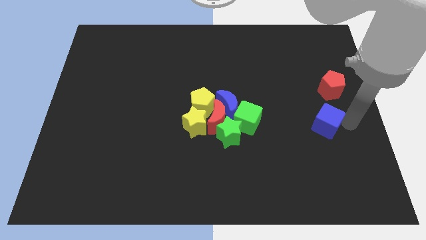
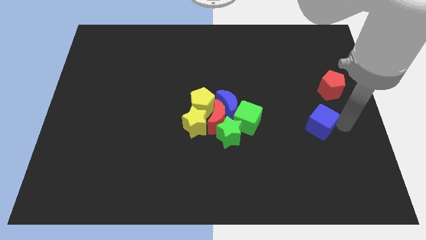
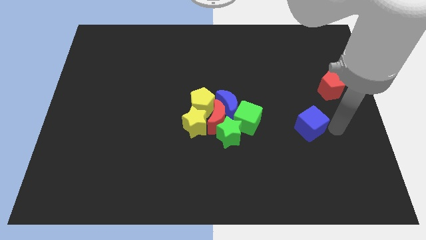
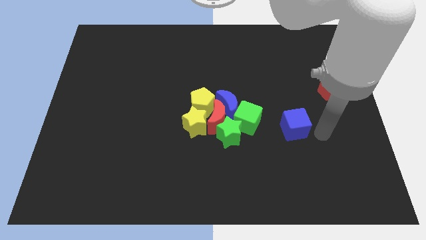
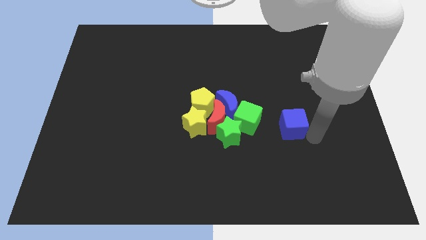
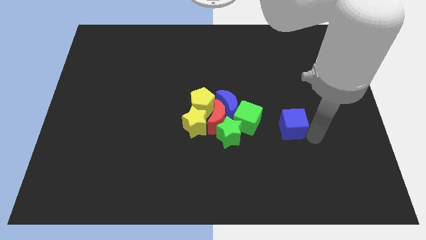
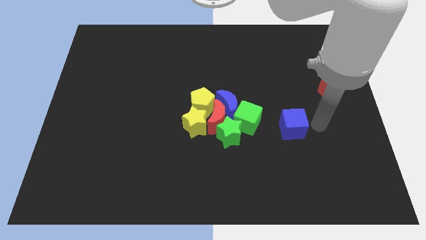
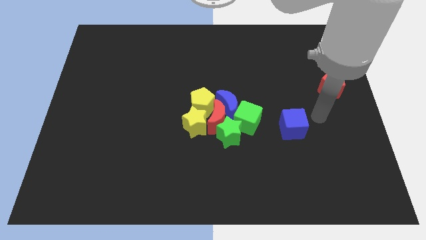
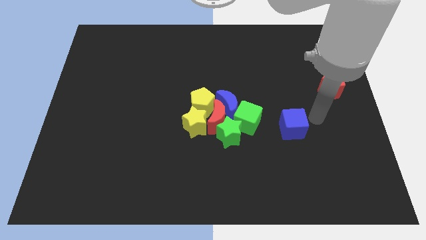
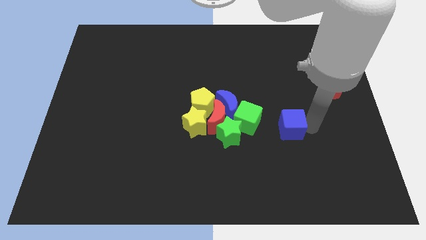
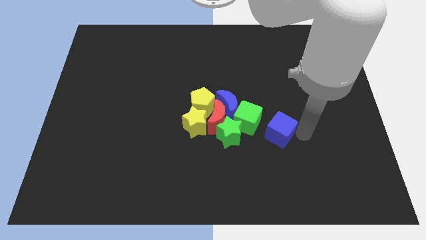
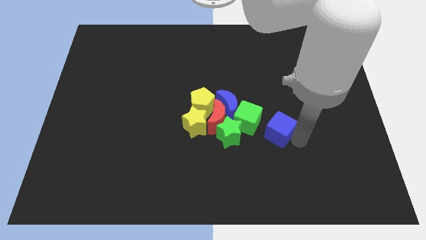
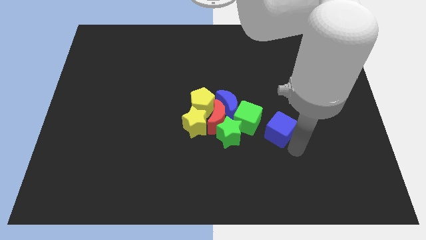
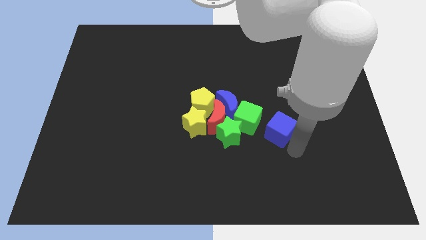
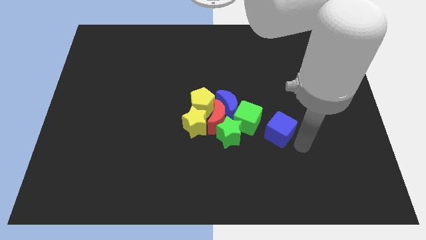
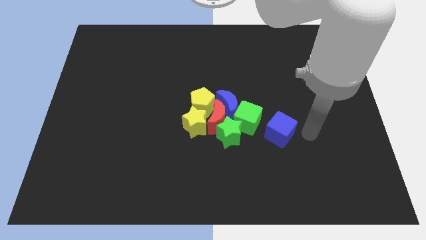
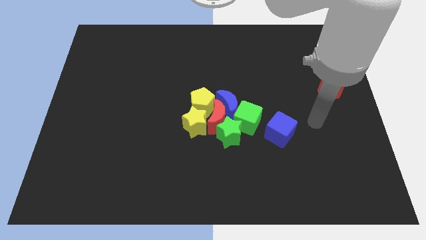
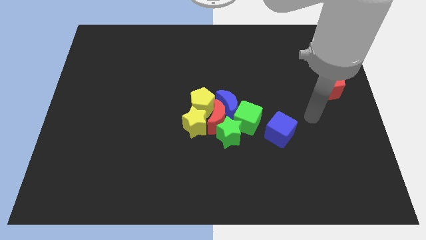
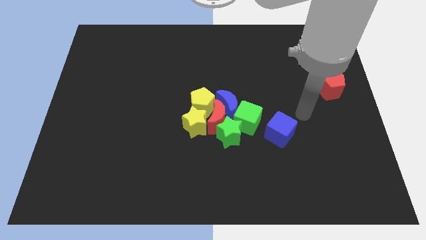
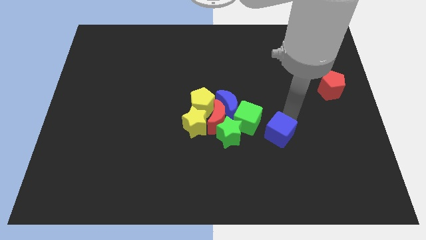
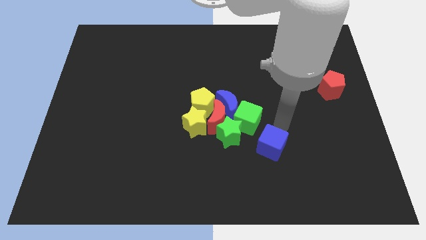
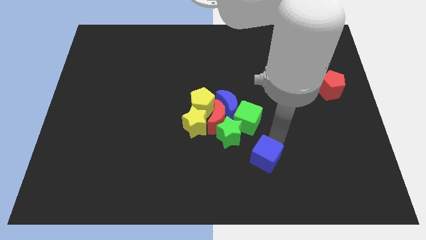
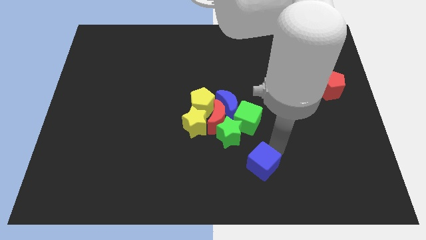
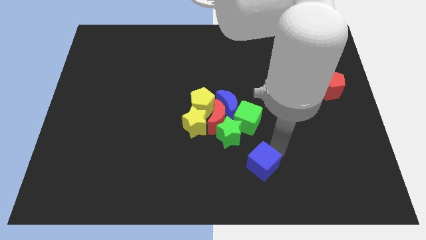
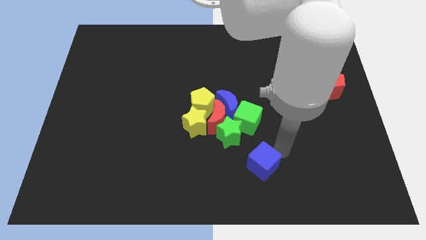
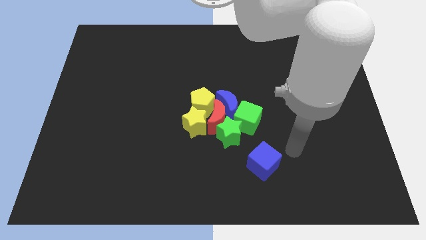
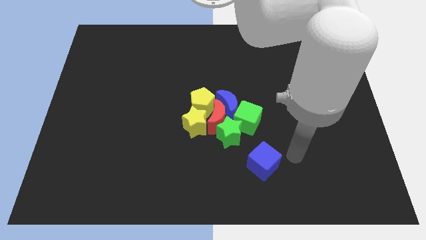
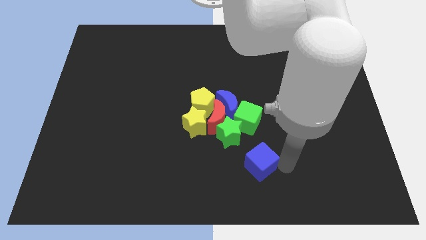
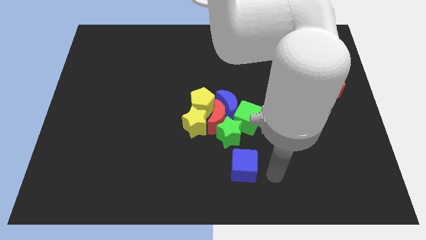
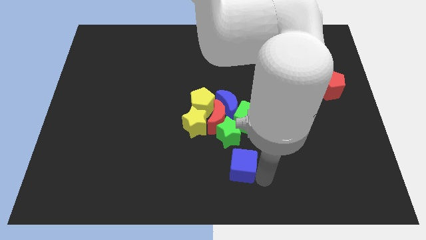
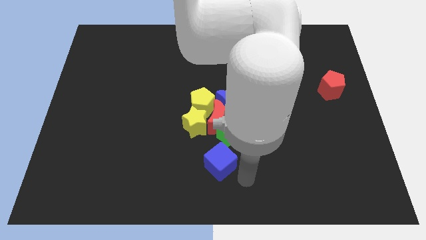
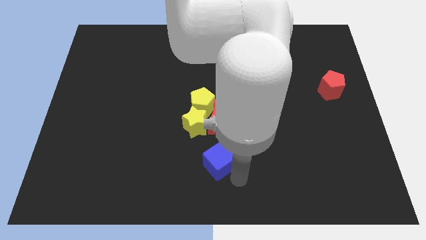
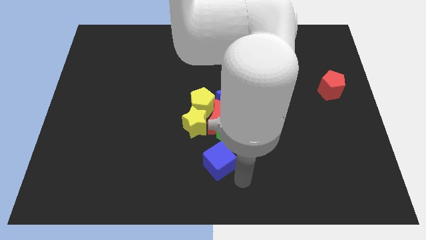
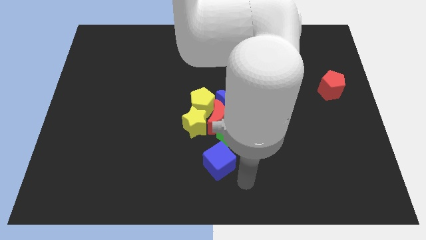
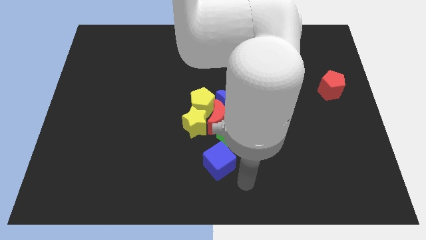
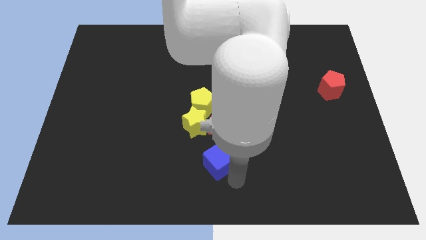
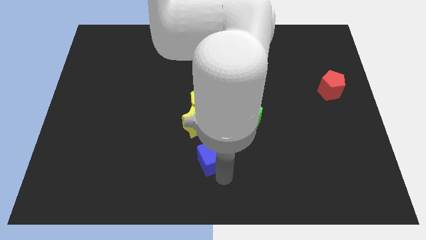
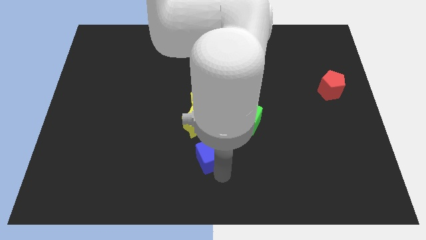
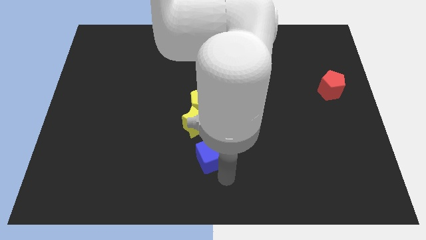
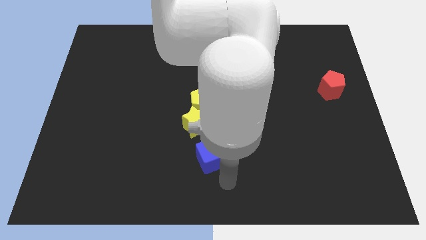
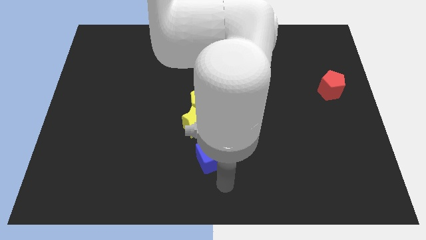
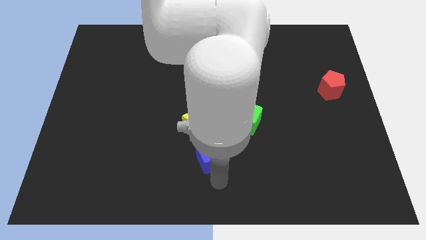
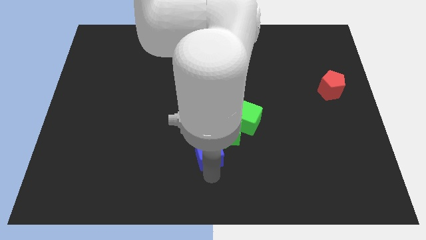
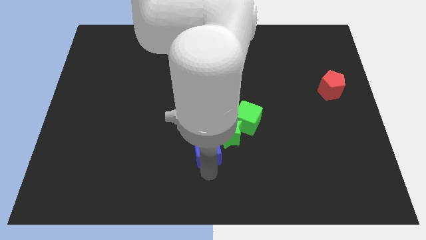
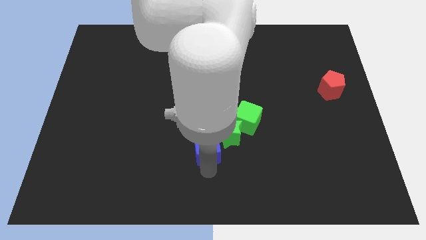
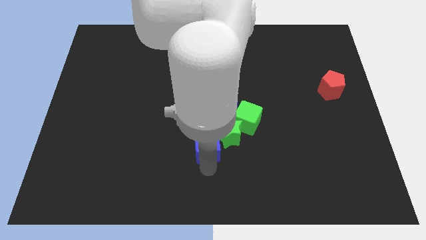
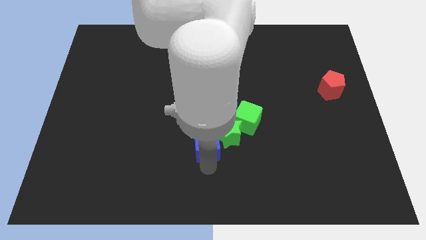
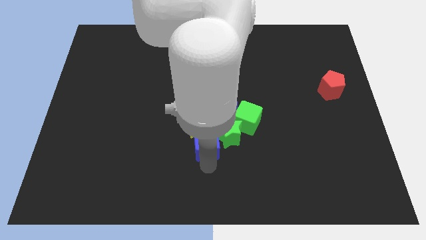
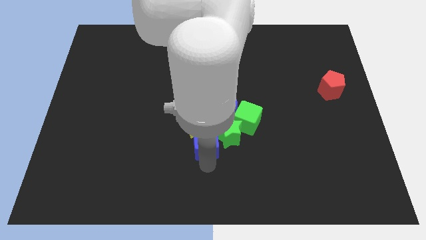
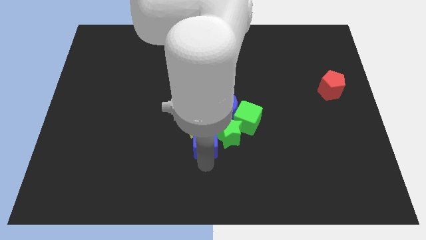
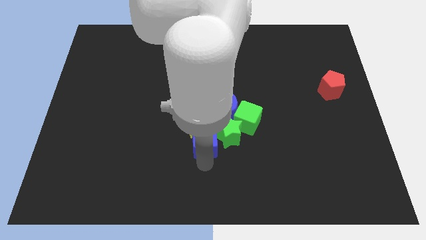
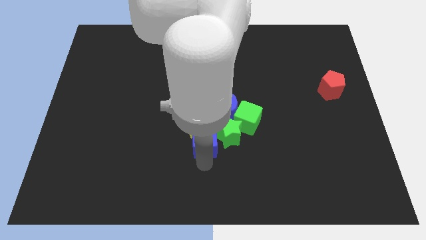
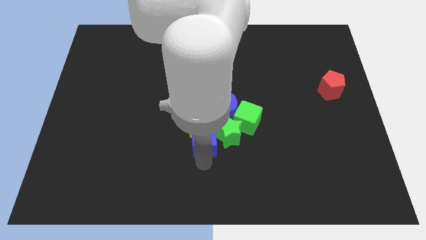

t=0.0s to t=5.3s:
push the blue cube towards the yellow star

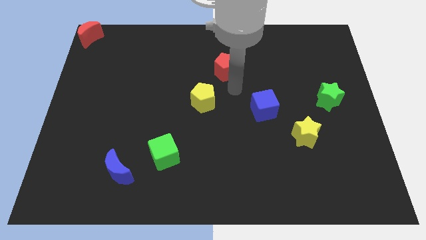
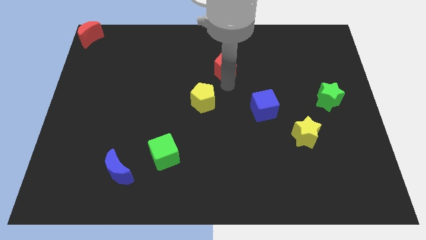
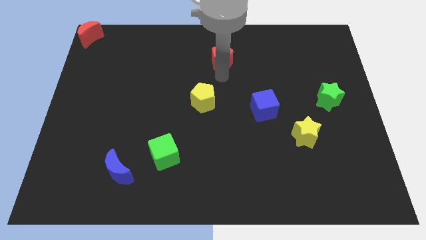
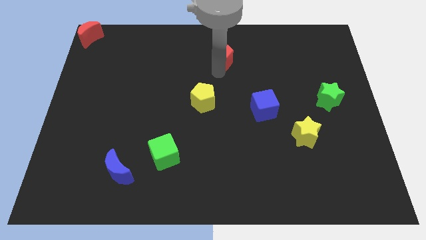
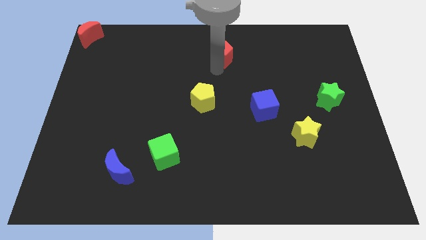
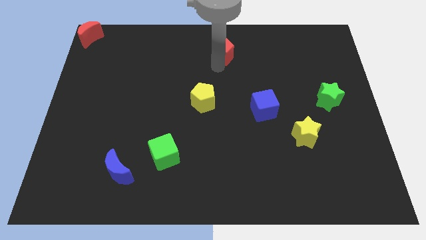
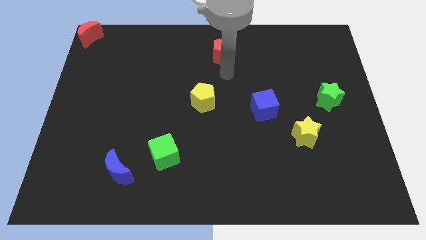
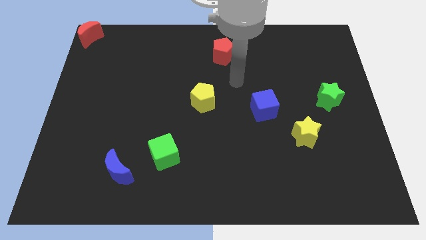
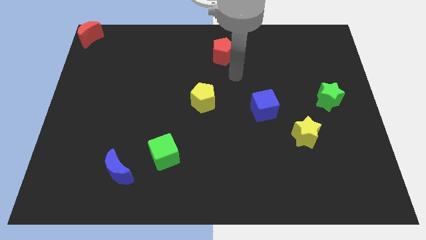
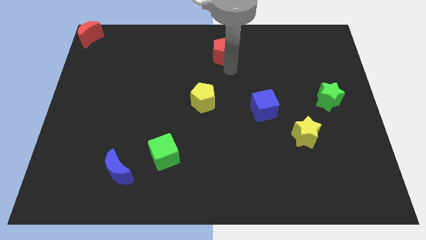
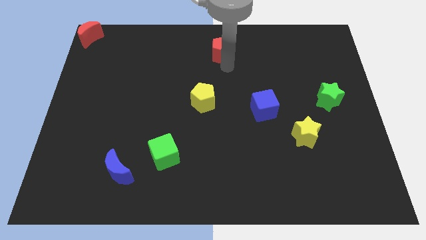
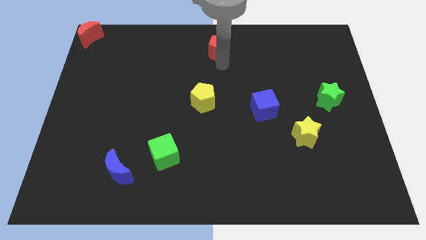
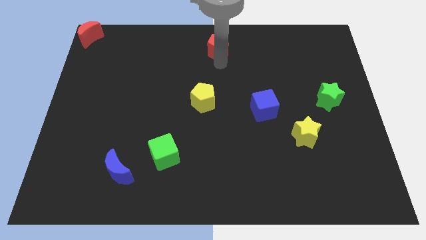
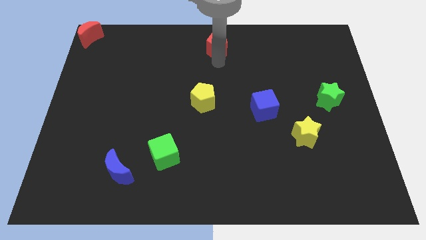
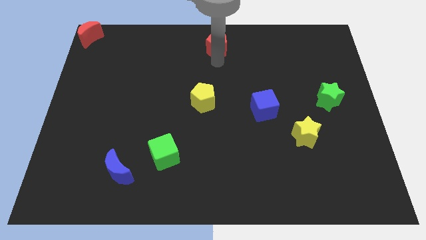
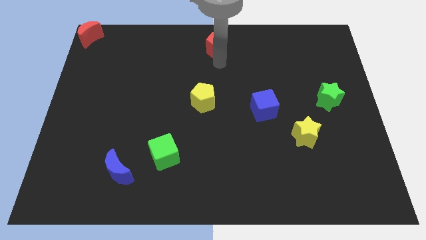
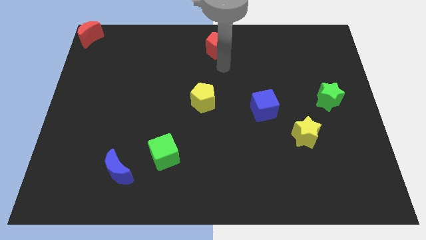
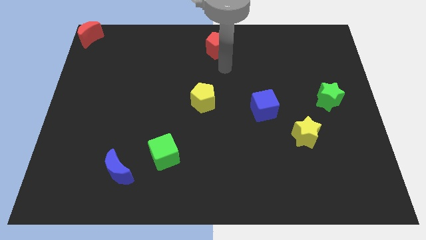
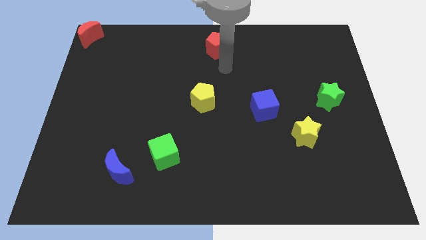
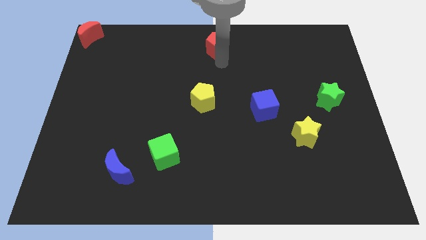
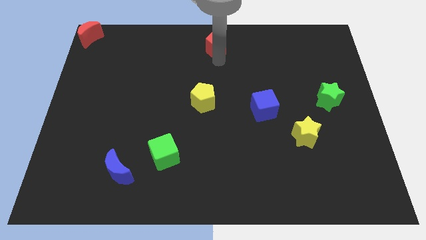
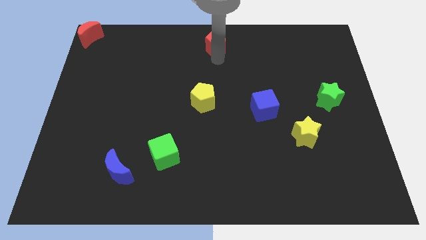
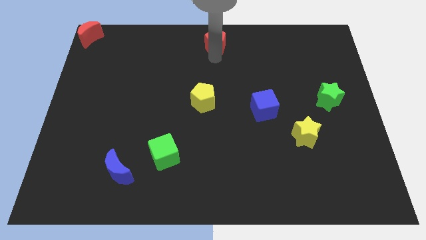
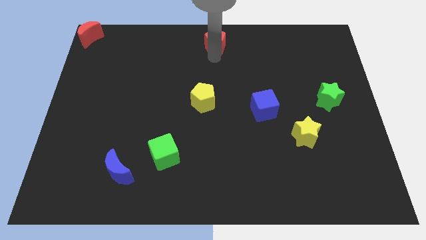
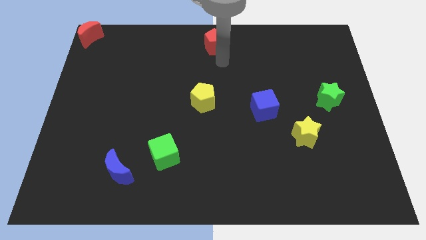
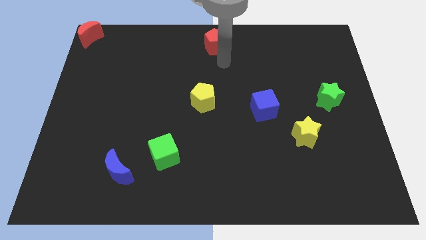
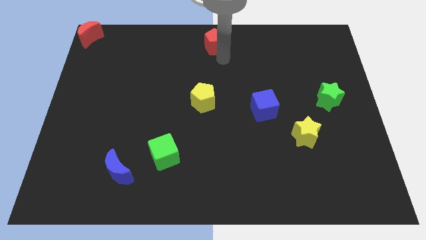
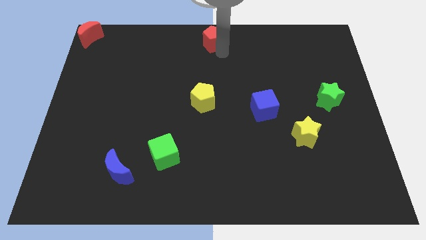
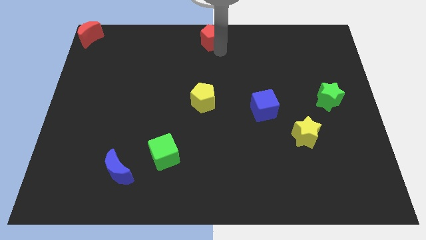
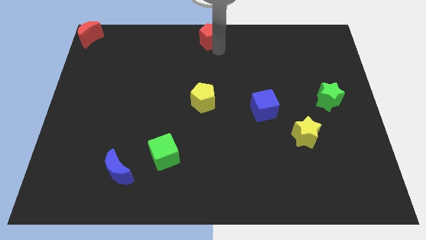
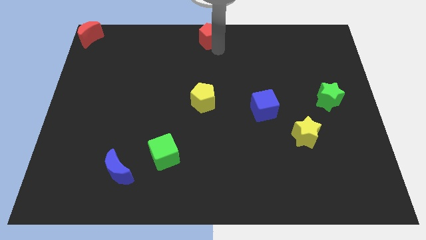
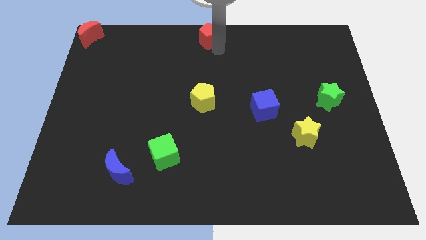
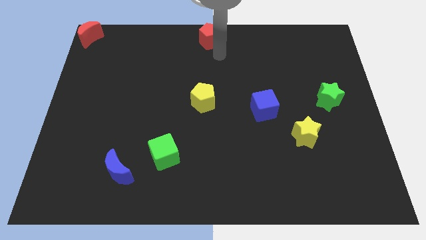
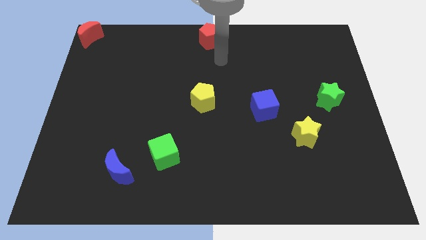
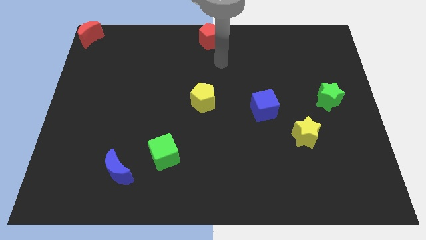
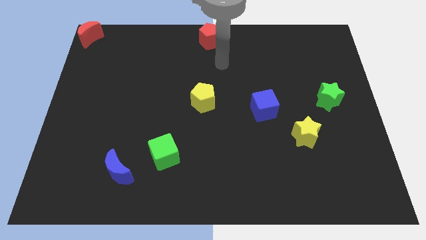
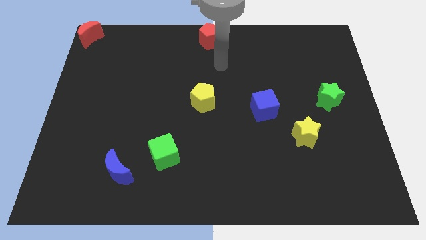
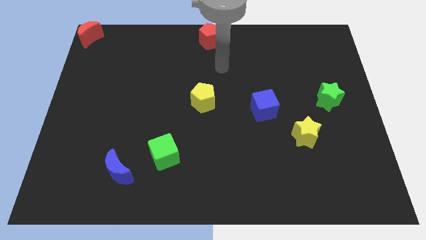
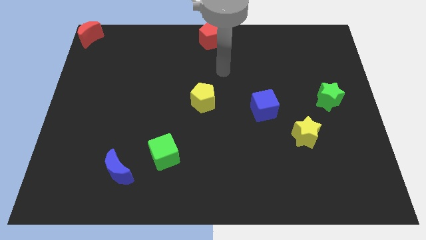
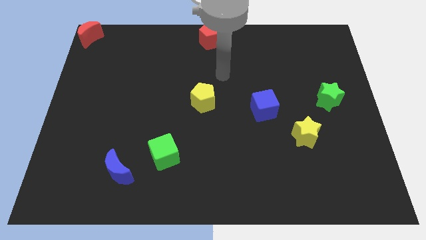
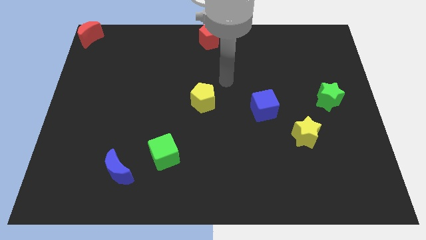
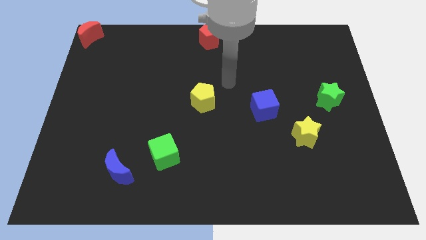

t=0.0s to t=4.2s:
place the red pentagon at the top center of the board
